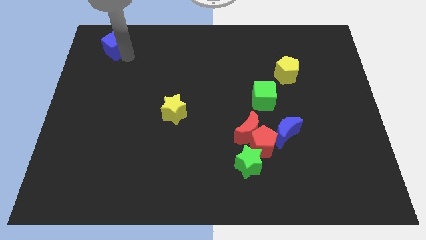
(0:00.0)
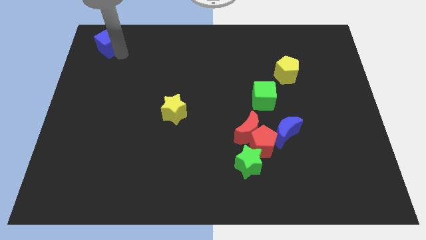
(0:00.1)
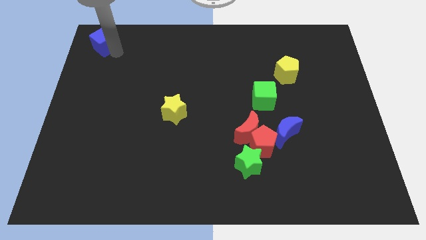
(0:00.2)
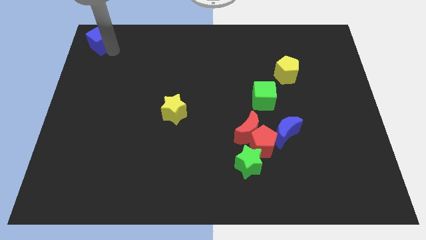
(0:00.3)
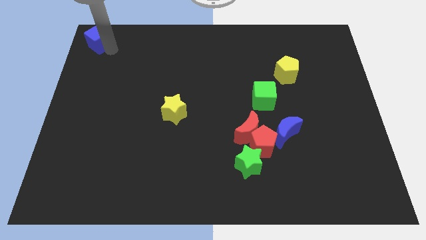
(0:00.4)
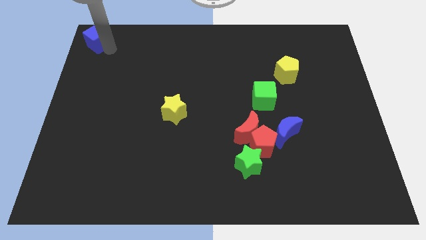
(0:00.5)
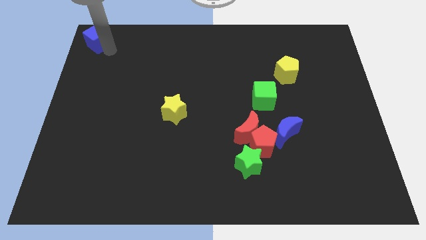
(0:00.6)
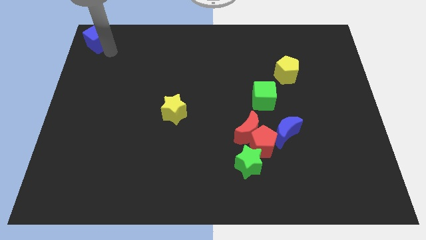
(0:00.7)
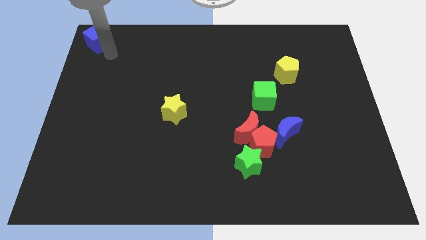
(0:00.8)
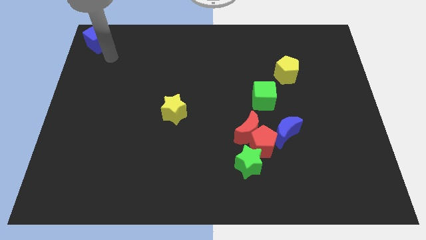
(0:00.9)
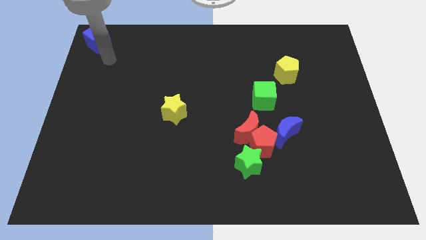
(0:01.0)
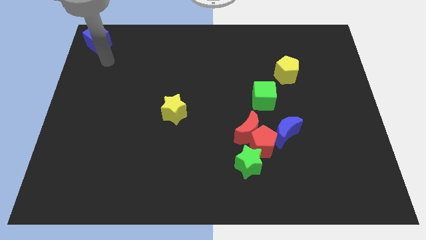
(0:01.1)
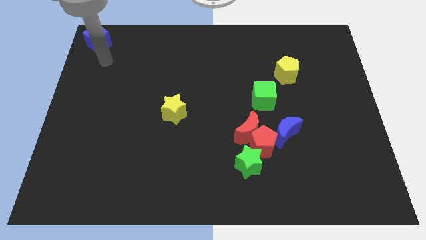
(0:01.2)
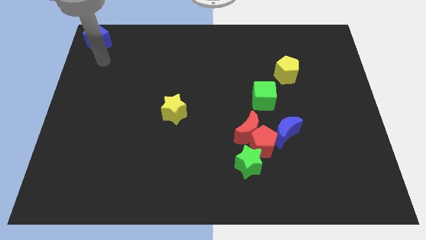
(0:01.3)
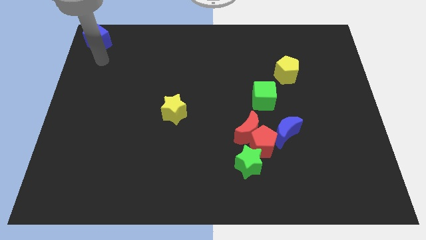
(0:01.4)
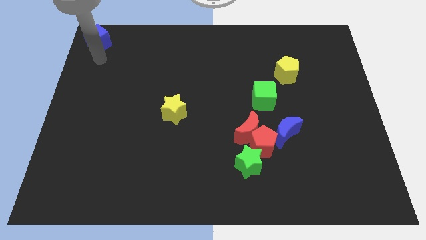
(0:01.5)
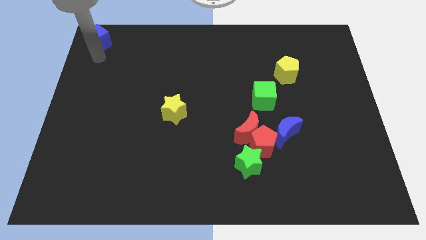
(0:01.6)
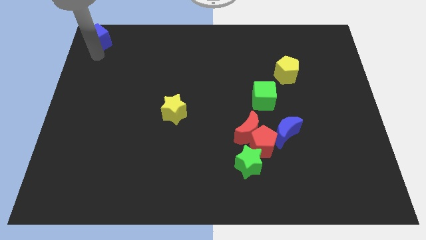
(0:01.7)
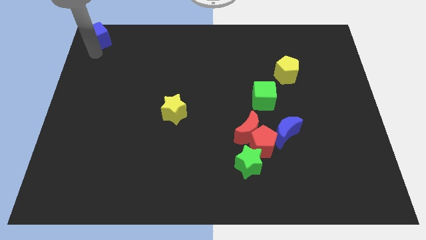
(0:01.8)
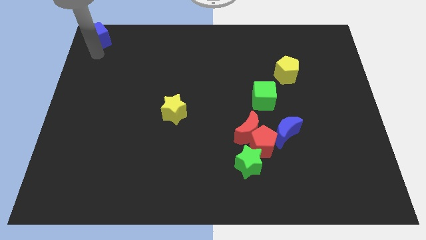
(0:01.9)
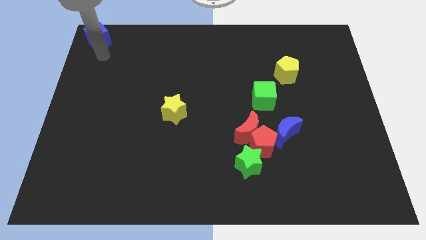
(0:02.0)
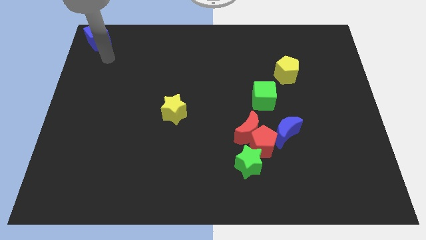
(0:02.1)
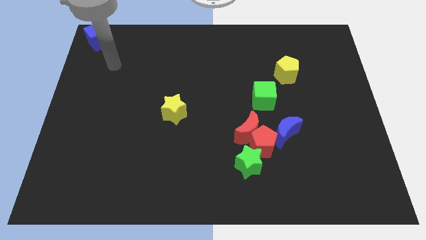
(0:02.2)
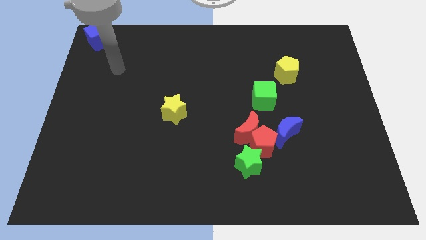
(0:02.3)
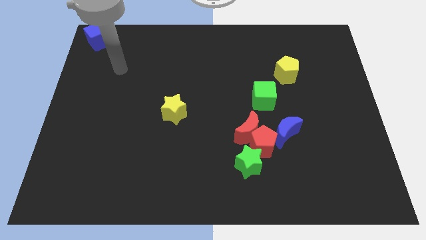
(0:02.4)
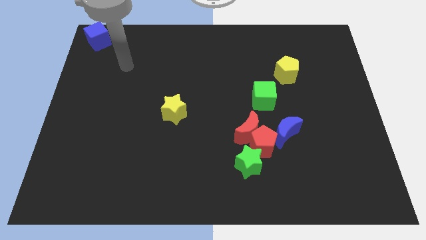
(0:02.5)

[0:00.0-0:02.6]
push the blue cube to the top left corner of the board

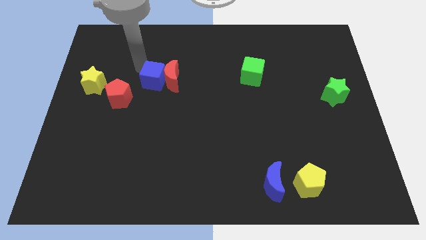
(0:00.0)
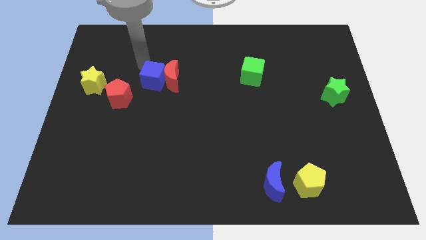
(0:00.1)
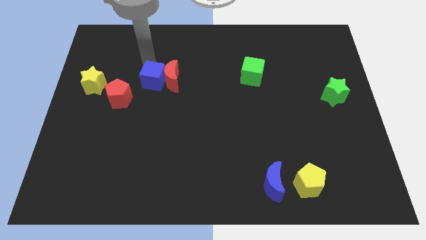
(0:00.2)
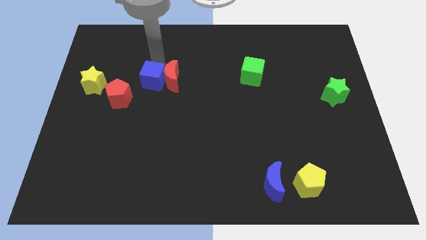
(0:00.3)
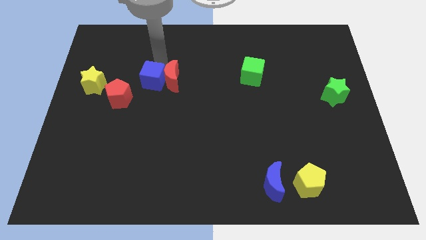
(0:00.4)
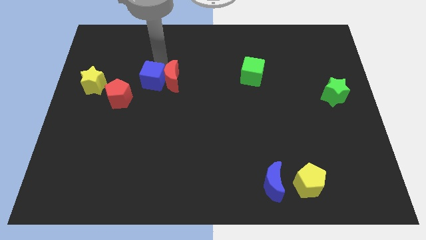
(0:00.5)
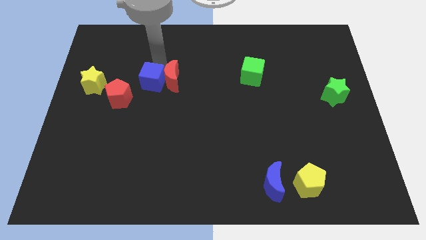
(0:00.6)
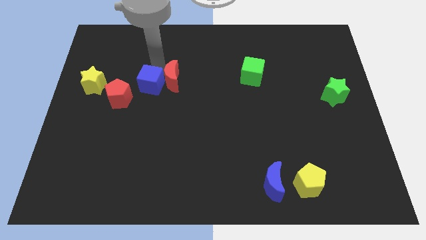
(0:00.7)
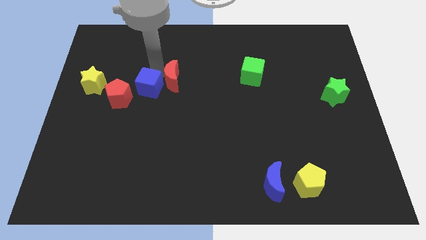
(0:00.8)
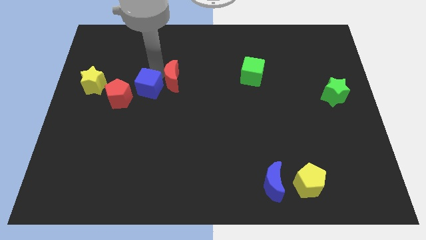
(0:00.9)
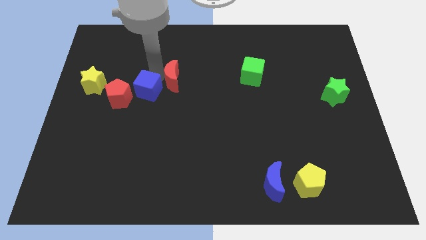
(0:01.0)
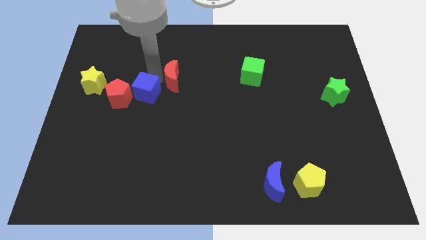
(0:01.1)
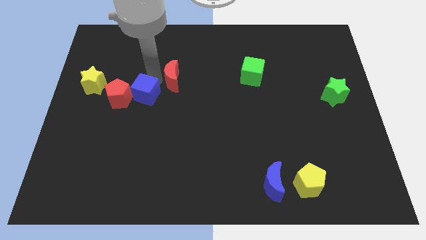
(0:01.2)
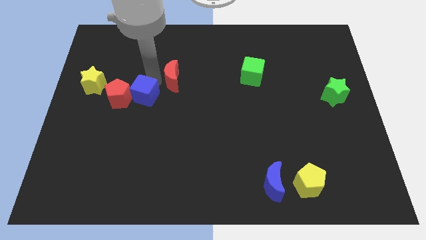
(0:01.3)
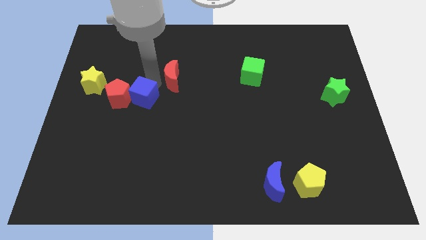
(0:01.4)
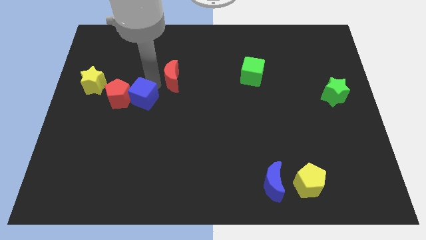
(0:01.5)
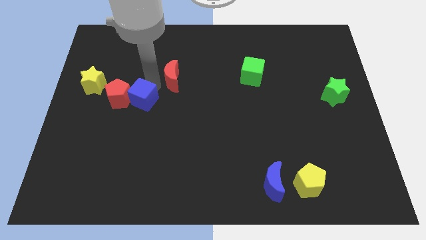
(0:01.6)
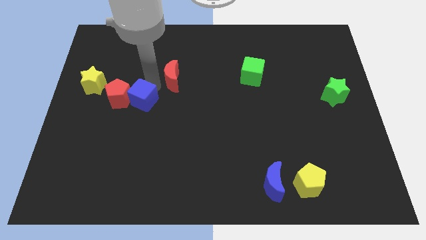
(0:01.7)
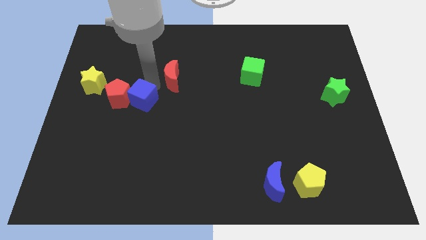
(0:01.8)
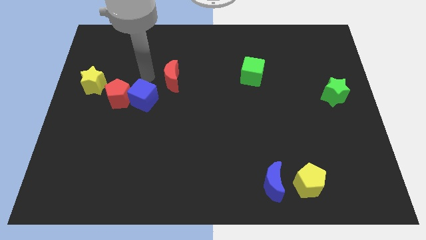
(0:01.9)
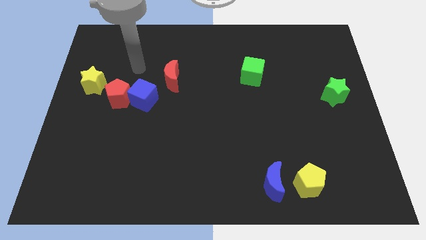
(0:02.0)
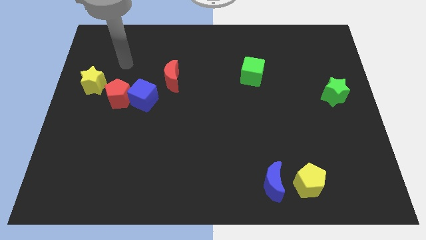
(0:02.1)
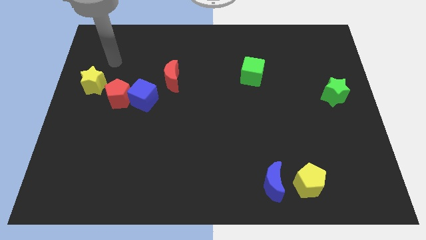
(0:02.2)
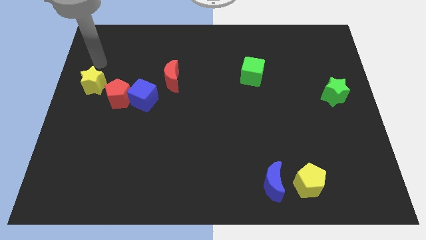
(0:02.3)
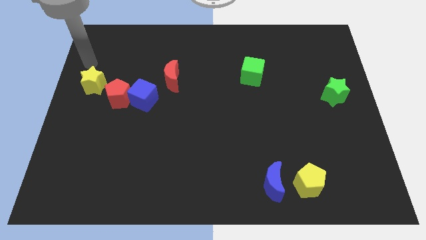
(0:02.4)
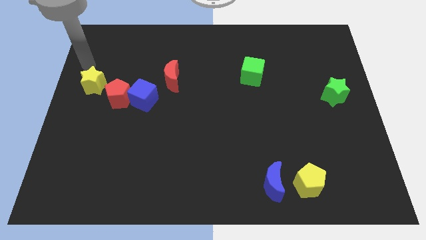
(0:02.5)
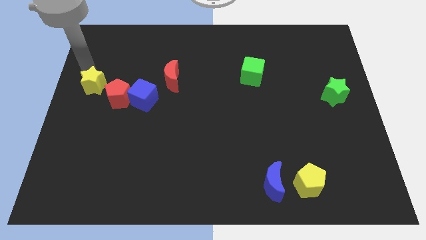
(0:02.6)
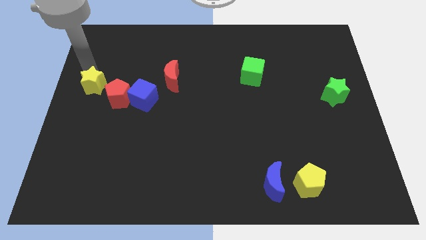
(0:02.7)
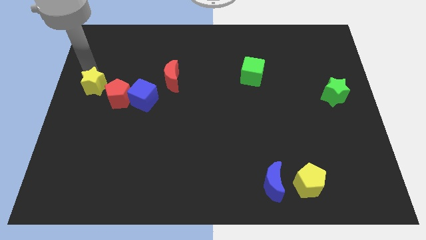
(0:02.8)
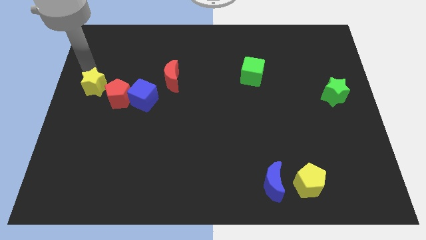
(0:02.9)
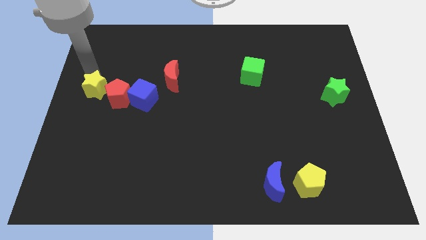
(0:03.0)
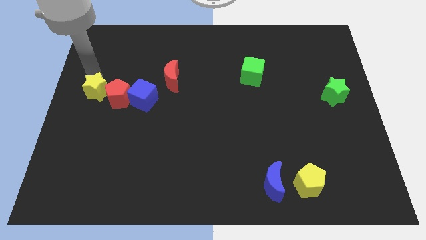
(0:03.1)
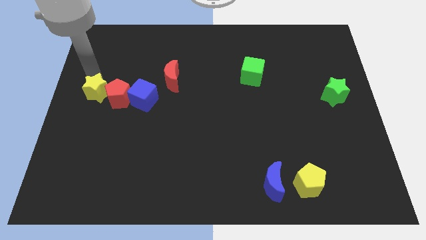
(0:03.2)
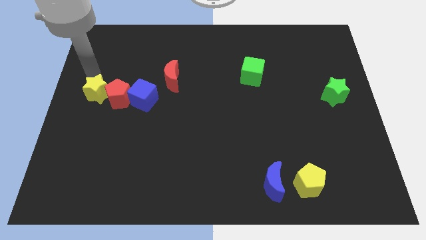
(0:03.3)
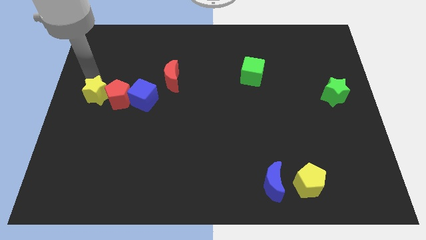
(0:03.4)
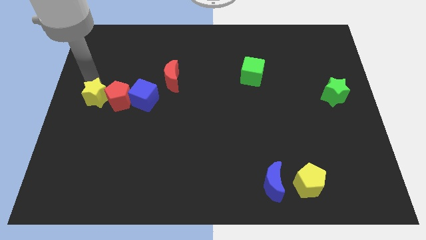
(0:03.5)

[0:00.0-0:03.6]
drag the yellow star slightly downwards

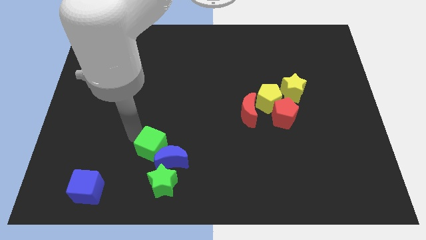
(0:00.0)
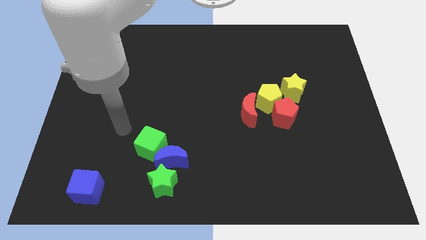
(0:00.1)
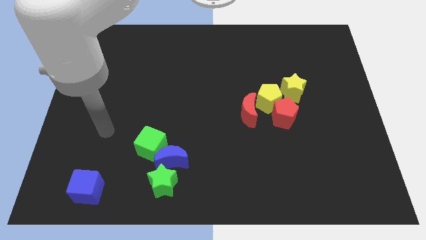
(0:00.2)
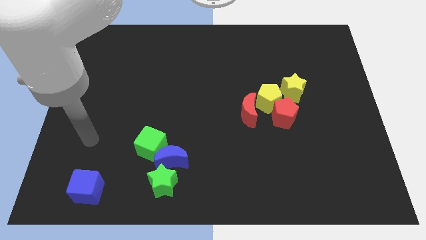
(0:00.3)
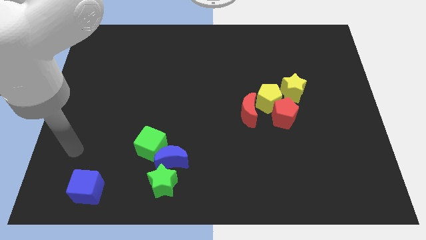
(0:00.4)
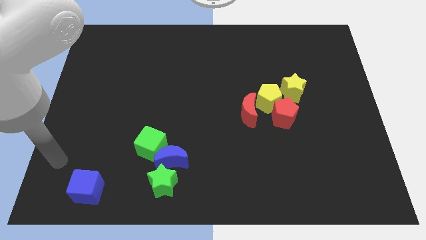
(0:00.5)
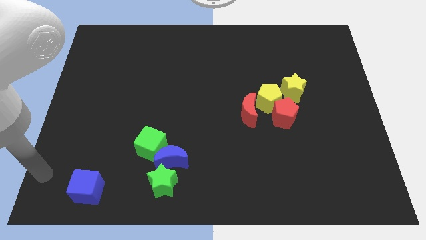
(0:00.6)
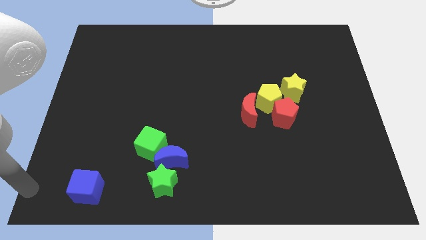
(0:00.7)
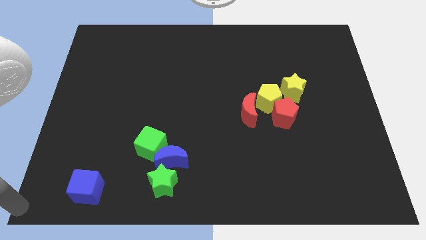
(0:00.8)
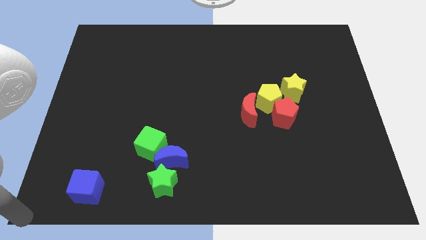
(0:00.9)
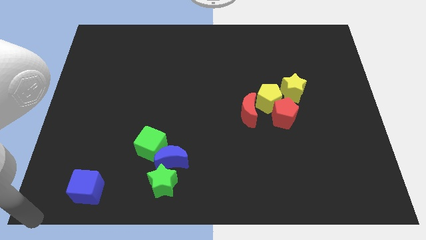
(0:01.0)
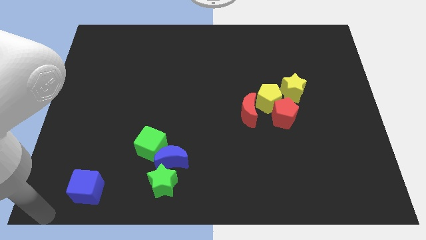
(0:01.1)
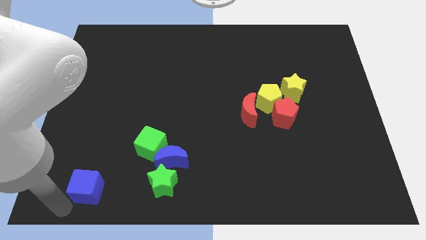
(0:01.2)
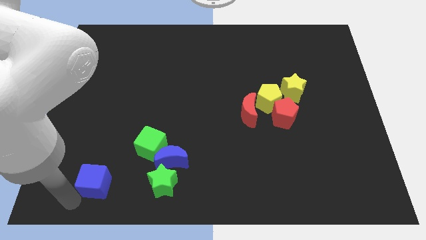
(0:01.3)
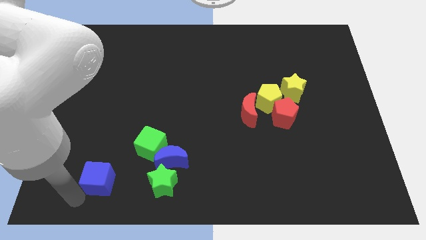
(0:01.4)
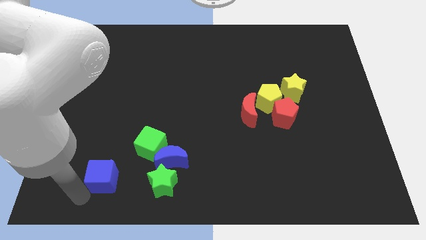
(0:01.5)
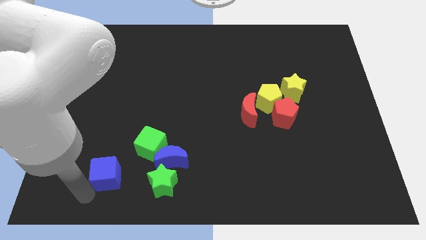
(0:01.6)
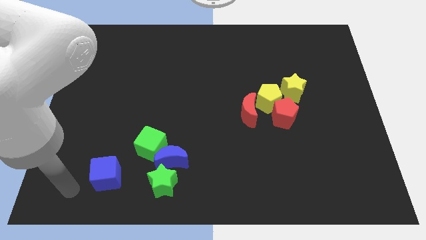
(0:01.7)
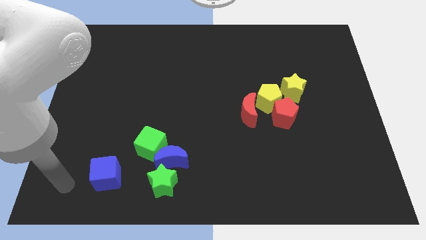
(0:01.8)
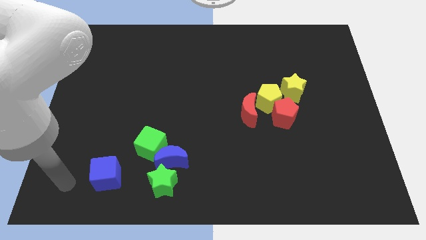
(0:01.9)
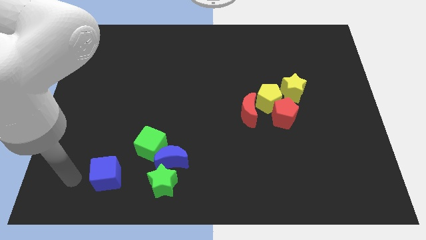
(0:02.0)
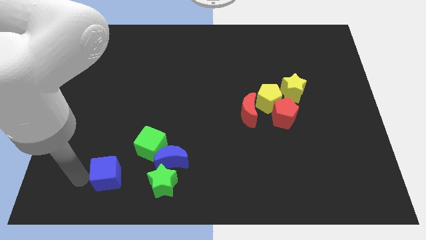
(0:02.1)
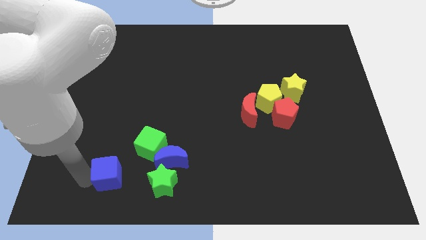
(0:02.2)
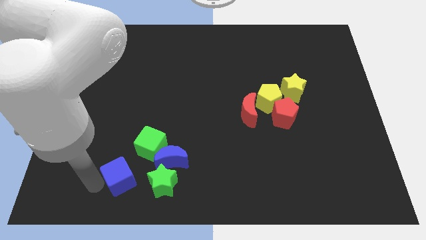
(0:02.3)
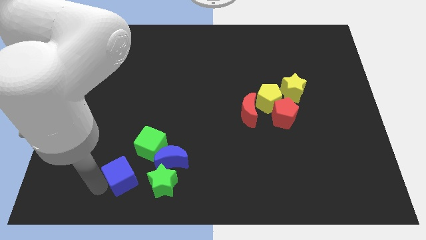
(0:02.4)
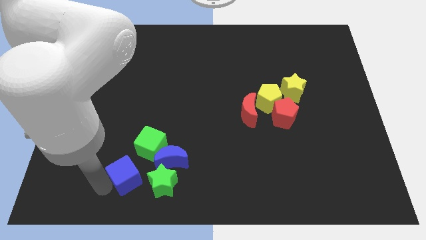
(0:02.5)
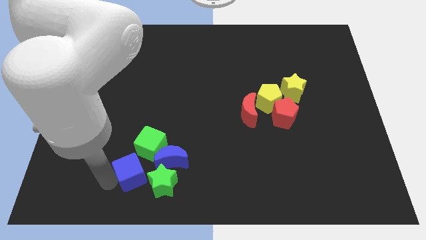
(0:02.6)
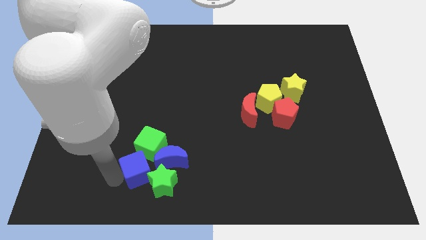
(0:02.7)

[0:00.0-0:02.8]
place the blue cube left to the blue crescent
